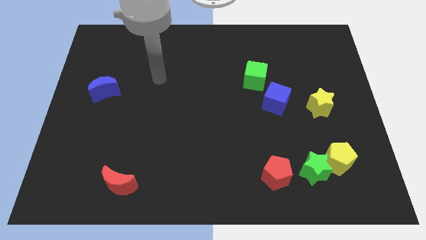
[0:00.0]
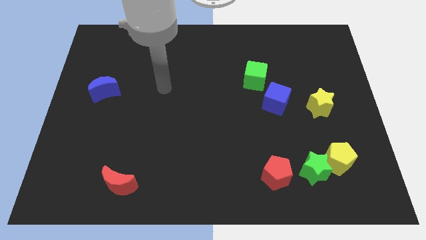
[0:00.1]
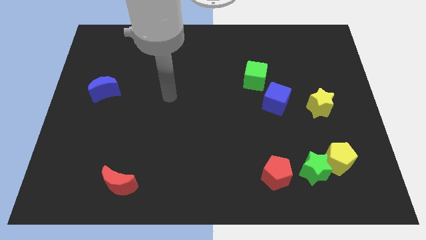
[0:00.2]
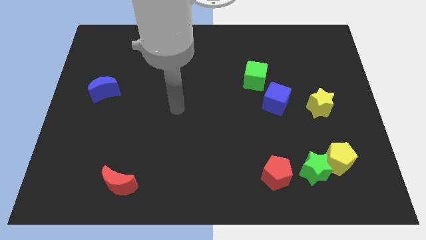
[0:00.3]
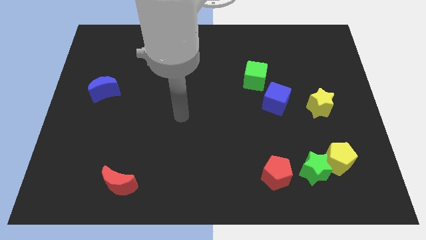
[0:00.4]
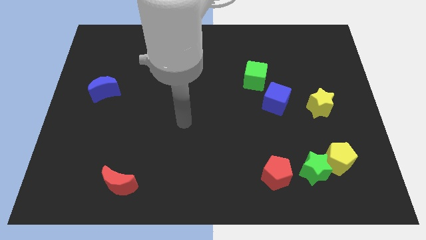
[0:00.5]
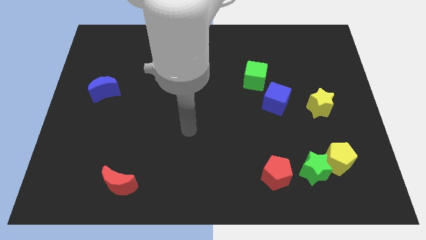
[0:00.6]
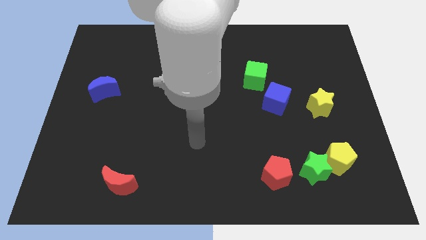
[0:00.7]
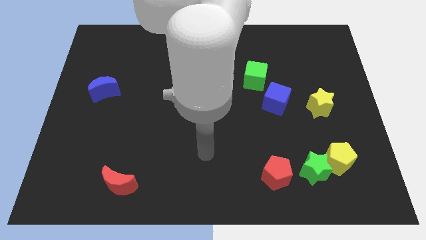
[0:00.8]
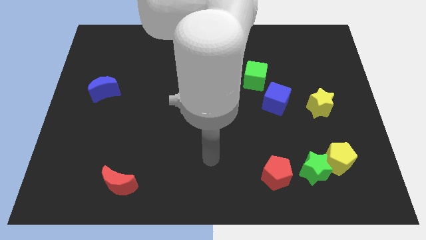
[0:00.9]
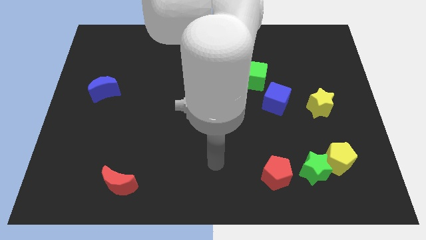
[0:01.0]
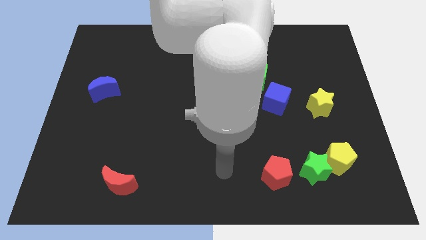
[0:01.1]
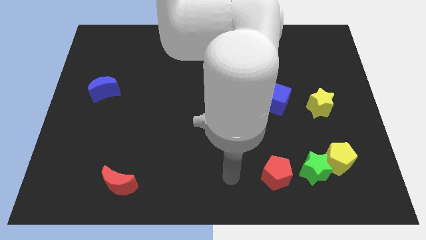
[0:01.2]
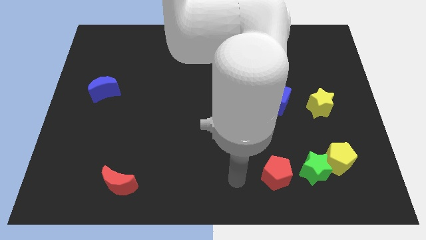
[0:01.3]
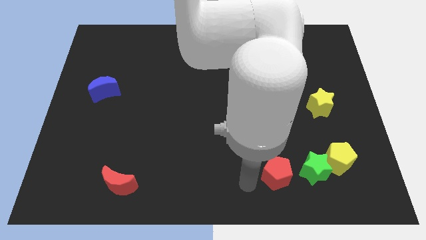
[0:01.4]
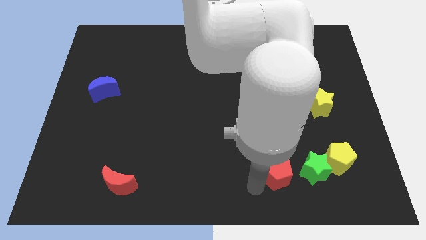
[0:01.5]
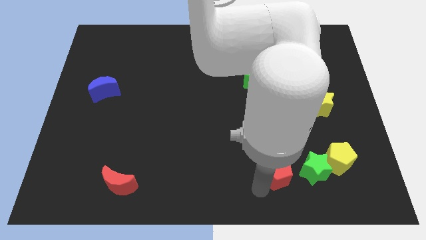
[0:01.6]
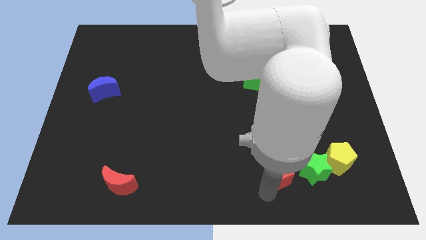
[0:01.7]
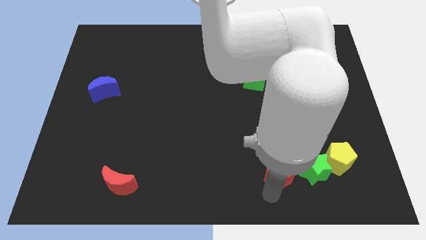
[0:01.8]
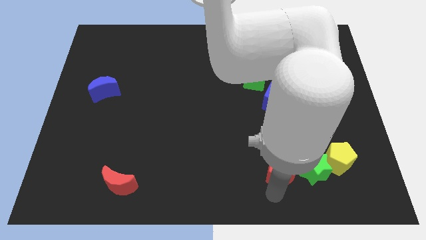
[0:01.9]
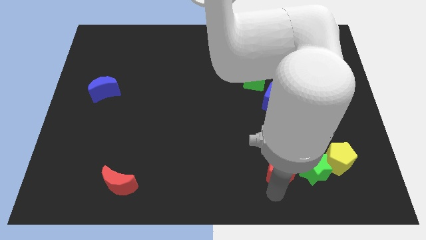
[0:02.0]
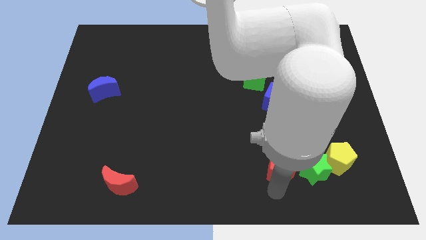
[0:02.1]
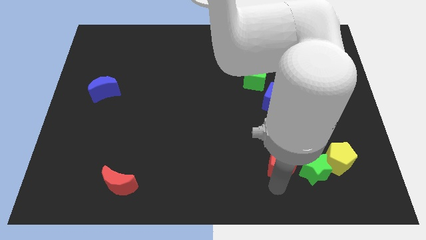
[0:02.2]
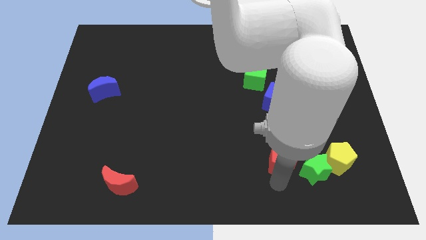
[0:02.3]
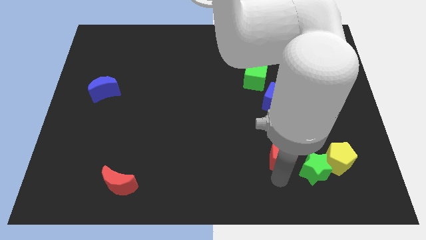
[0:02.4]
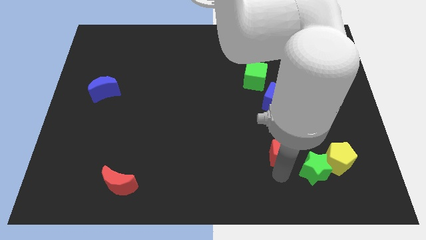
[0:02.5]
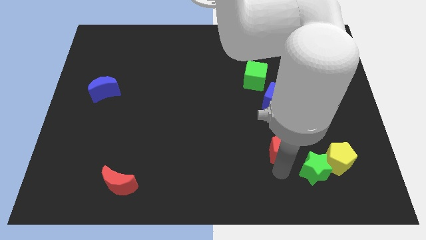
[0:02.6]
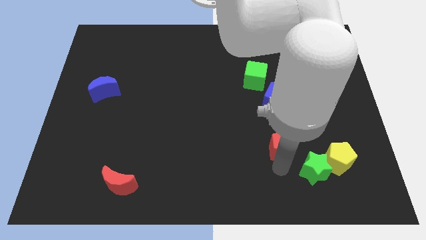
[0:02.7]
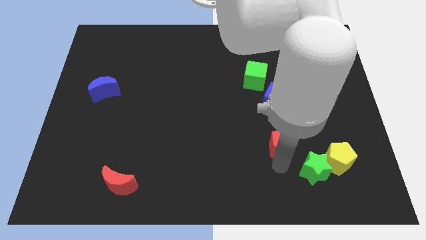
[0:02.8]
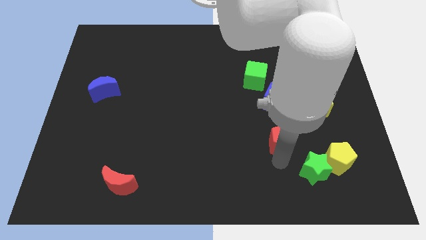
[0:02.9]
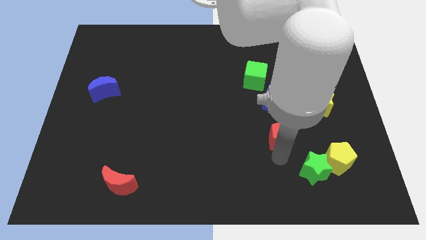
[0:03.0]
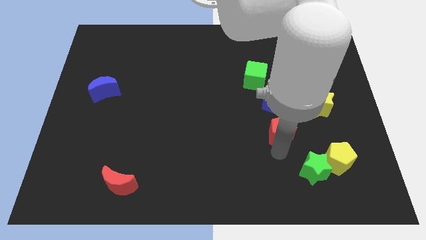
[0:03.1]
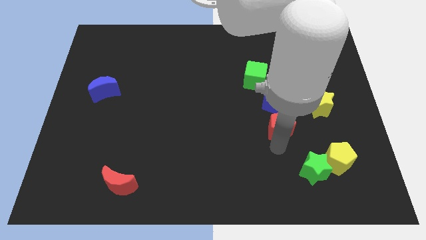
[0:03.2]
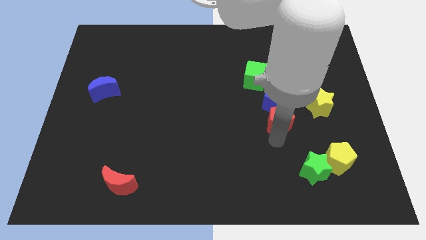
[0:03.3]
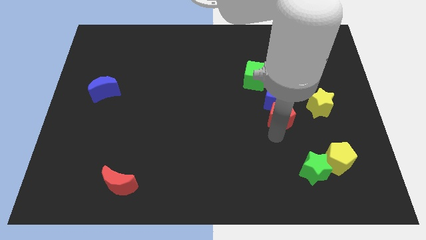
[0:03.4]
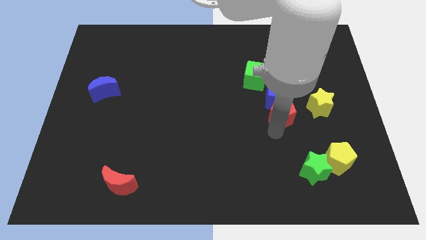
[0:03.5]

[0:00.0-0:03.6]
slide the red pentagon towards the blue cube

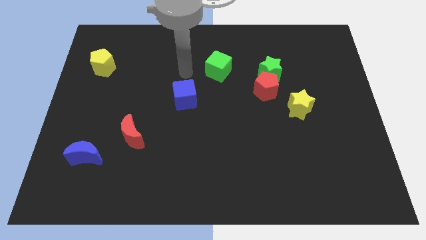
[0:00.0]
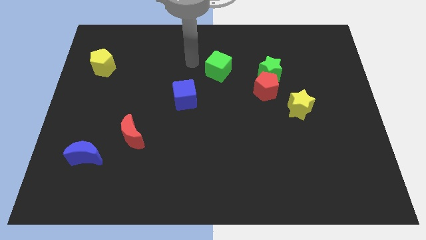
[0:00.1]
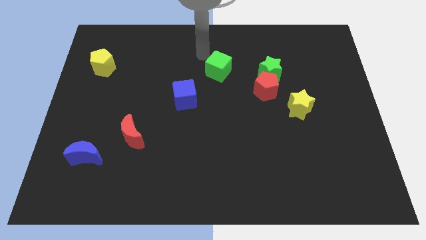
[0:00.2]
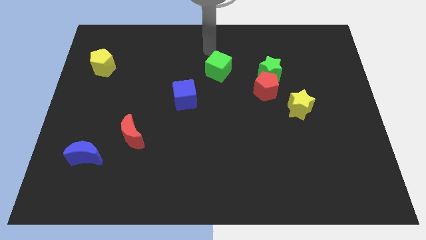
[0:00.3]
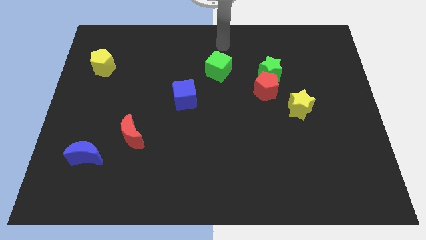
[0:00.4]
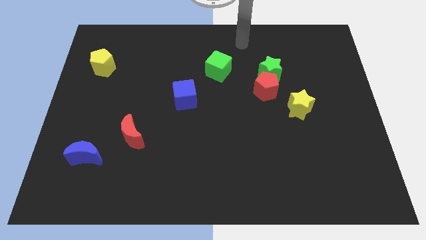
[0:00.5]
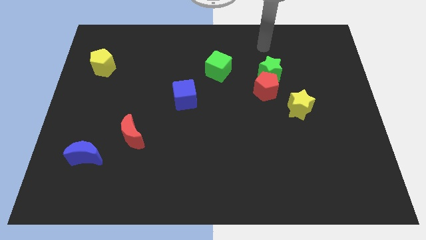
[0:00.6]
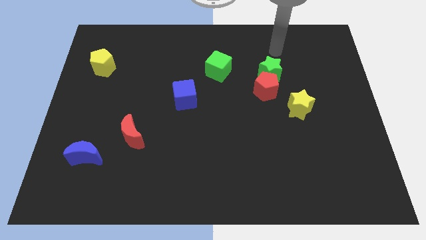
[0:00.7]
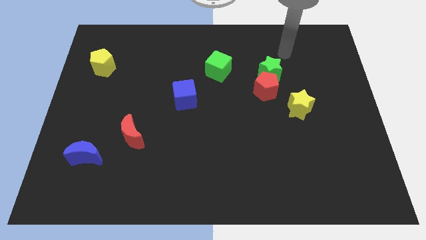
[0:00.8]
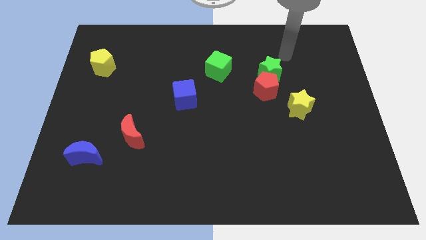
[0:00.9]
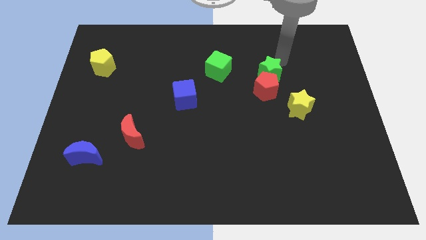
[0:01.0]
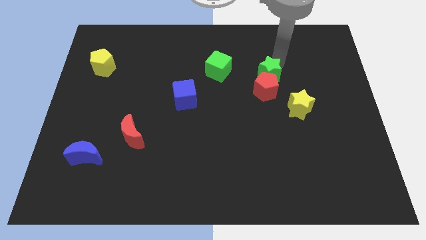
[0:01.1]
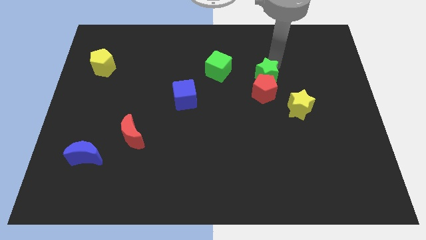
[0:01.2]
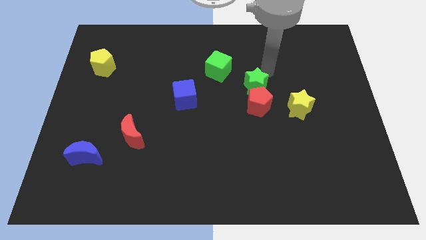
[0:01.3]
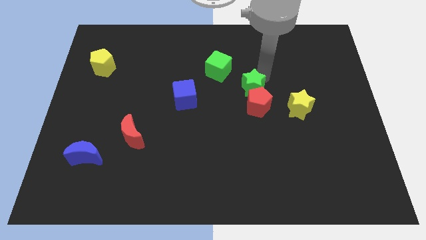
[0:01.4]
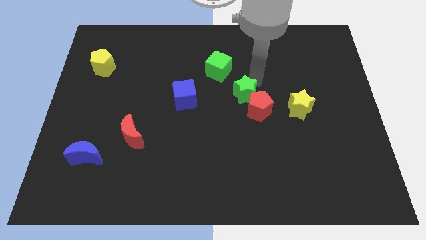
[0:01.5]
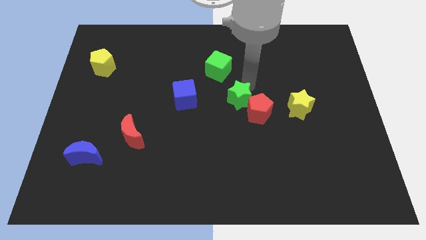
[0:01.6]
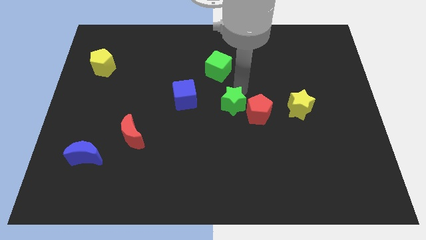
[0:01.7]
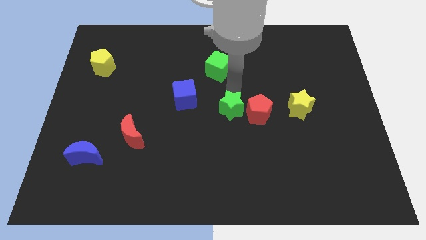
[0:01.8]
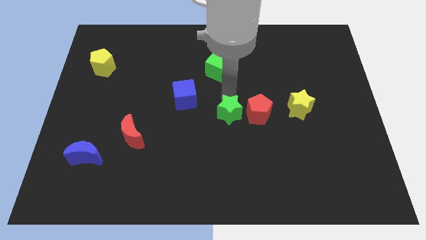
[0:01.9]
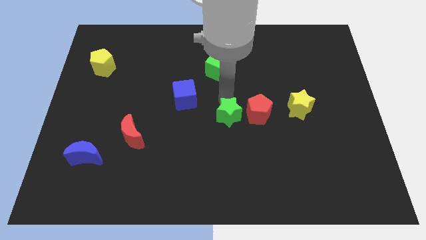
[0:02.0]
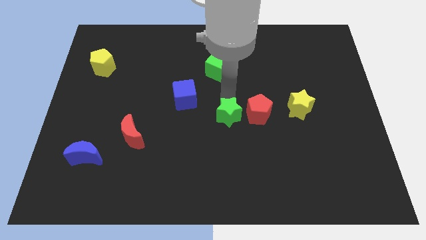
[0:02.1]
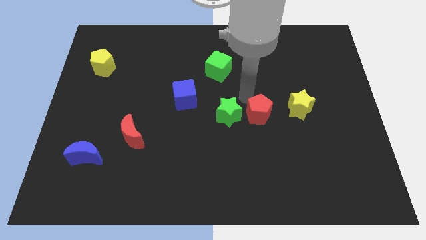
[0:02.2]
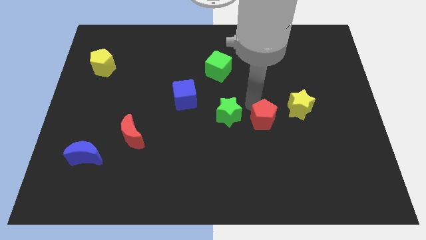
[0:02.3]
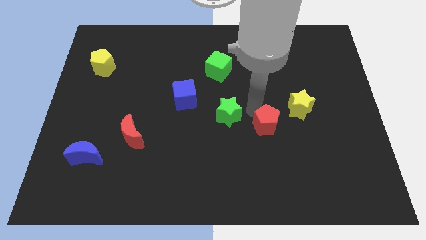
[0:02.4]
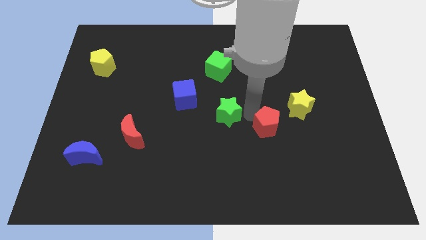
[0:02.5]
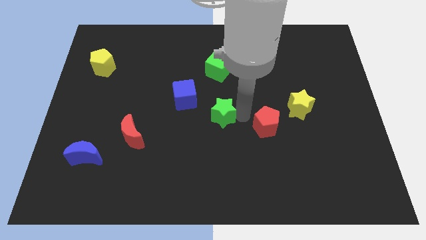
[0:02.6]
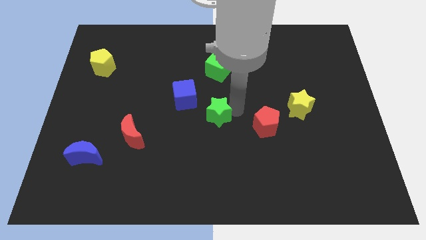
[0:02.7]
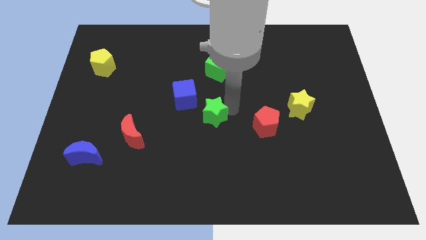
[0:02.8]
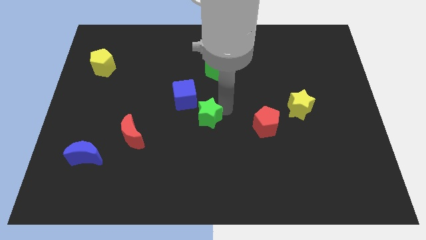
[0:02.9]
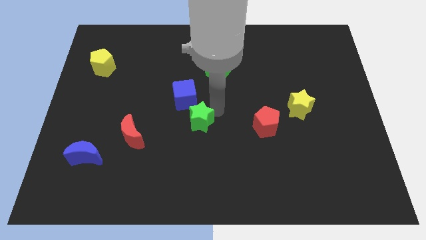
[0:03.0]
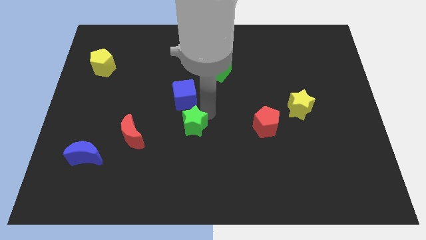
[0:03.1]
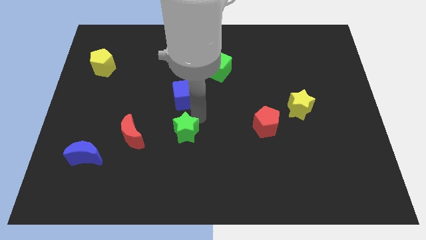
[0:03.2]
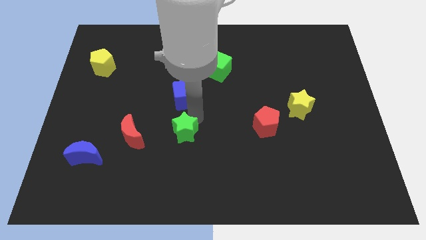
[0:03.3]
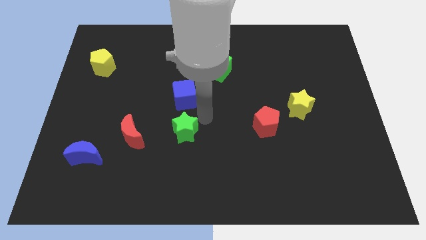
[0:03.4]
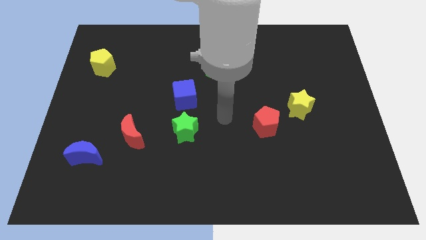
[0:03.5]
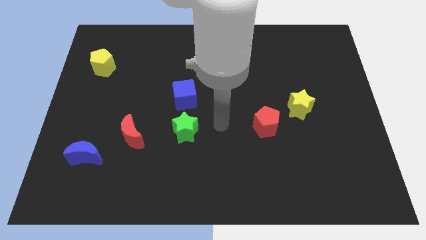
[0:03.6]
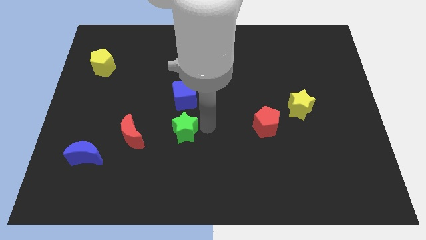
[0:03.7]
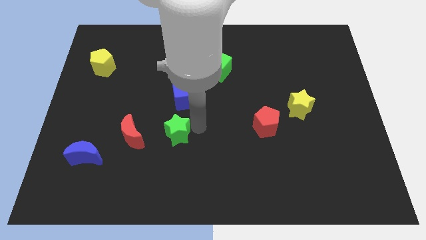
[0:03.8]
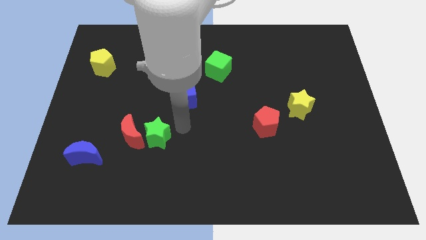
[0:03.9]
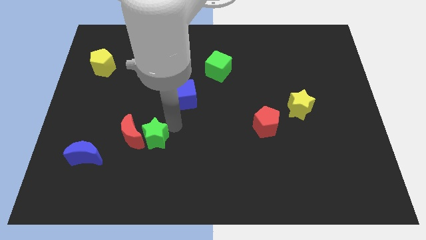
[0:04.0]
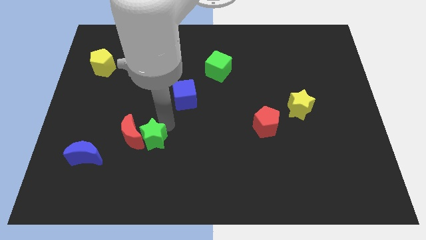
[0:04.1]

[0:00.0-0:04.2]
put the green star towards the red moon

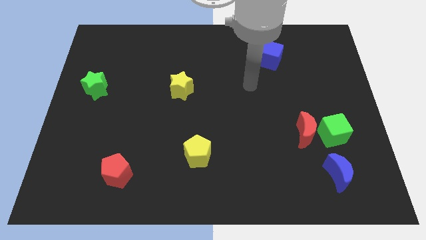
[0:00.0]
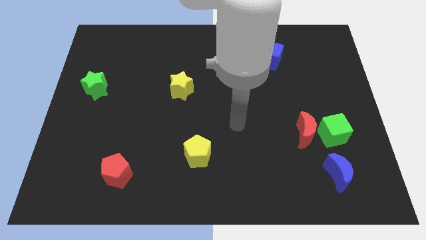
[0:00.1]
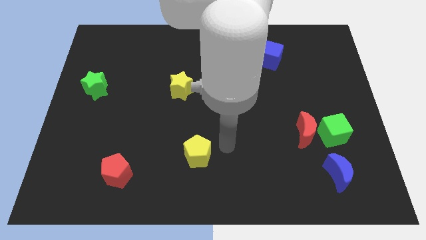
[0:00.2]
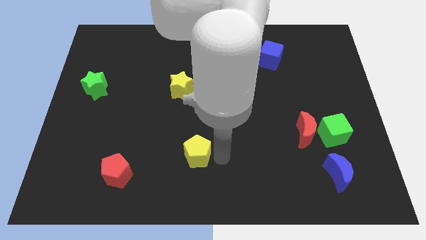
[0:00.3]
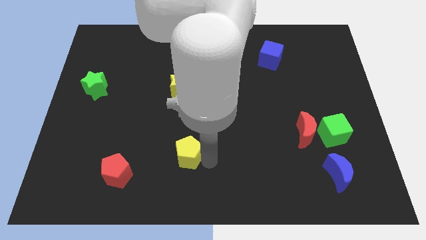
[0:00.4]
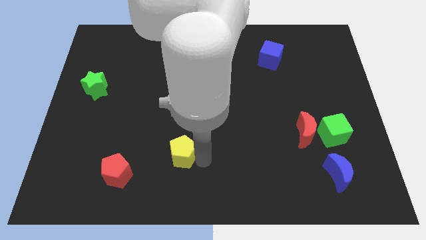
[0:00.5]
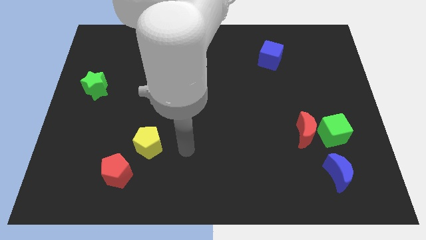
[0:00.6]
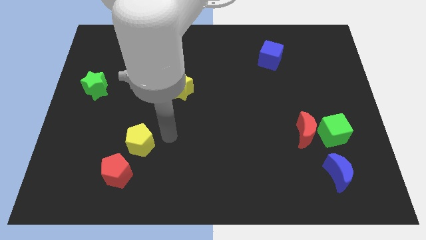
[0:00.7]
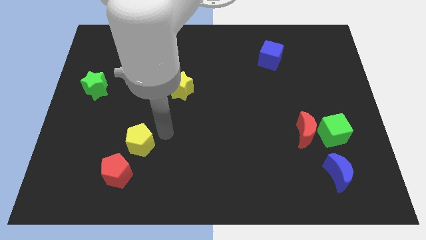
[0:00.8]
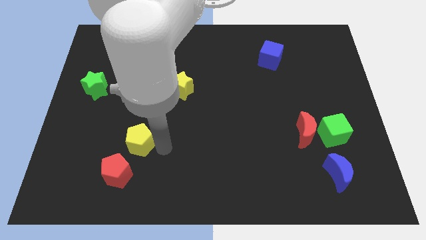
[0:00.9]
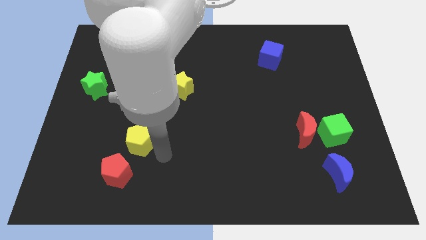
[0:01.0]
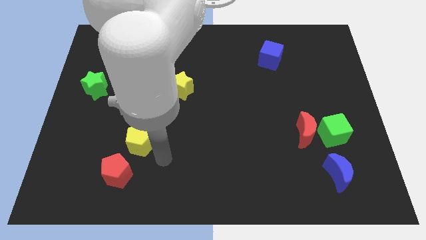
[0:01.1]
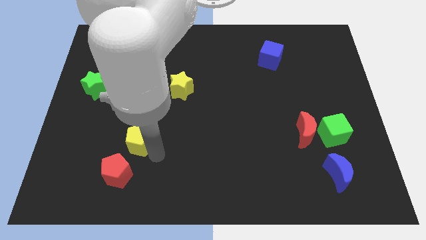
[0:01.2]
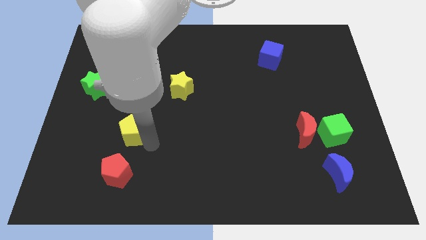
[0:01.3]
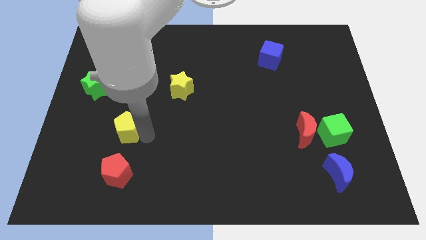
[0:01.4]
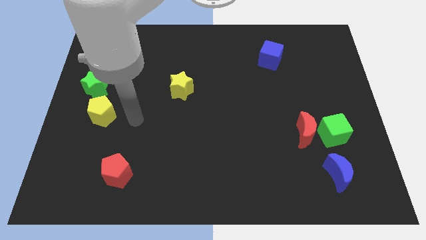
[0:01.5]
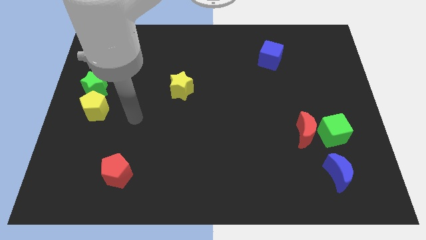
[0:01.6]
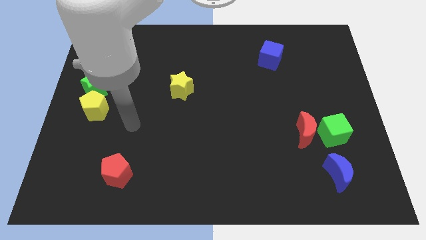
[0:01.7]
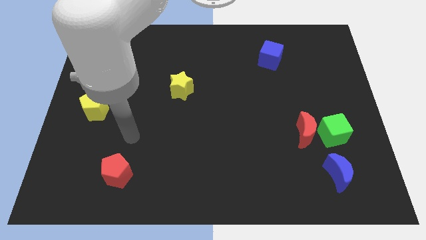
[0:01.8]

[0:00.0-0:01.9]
push the yellow pentagon to the green star
